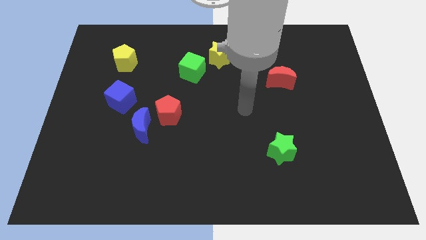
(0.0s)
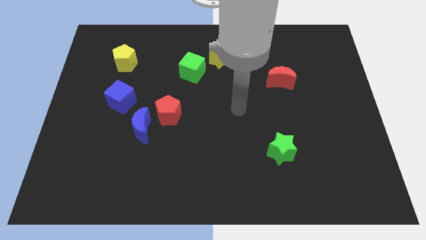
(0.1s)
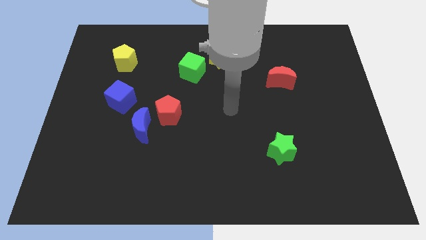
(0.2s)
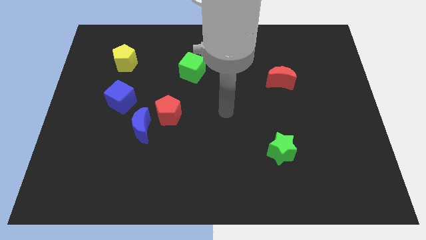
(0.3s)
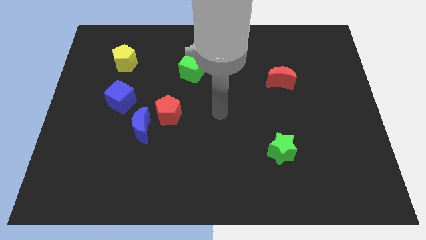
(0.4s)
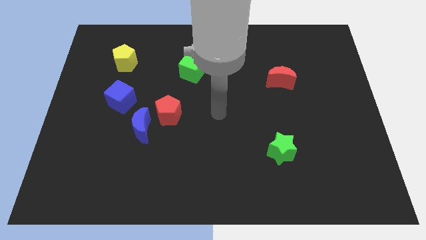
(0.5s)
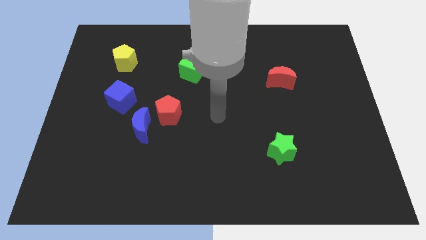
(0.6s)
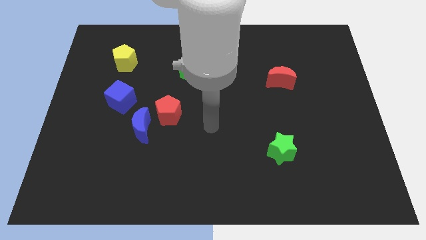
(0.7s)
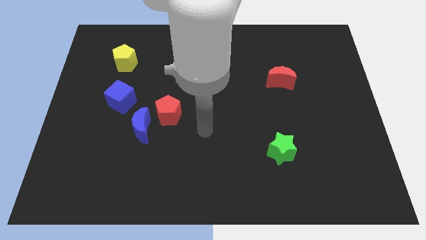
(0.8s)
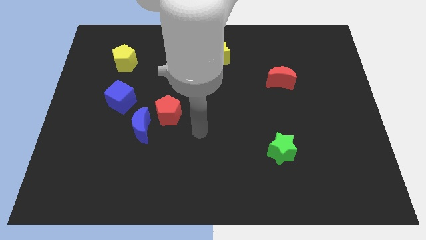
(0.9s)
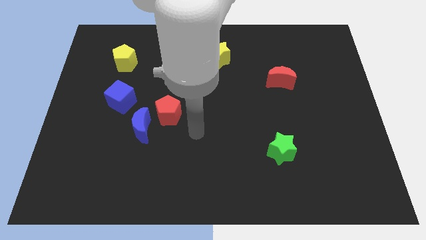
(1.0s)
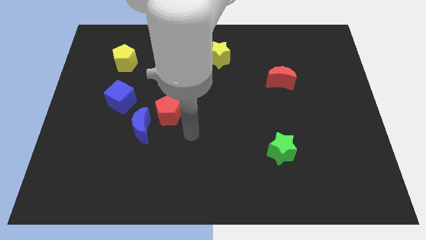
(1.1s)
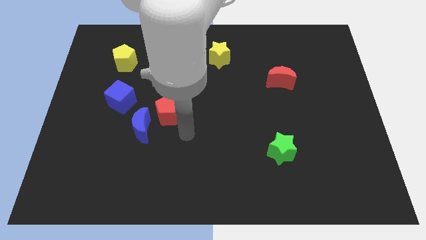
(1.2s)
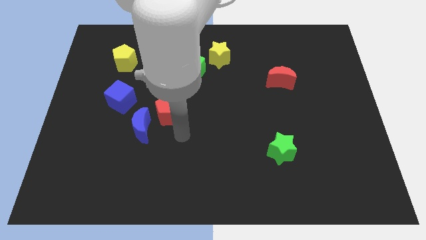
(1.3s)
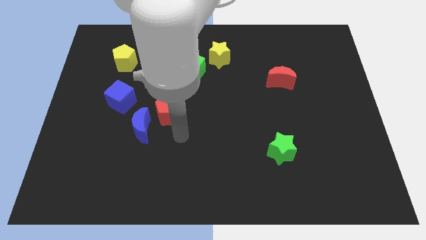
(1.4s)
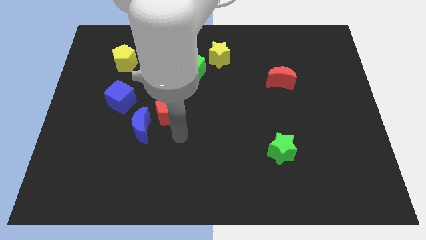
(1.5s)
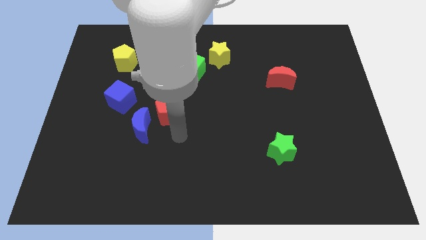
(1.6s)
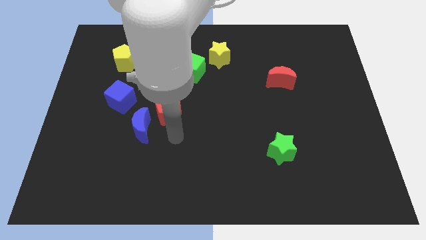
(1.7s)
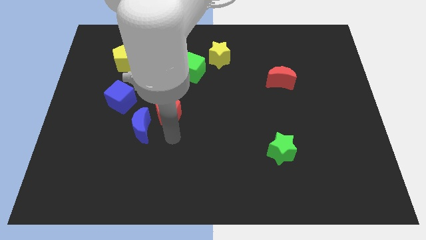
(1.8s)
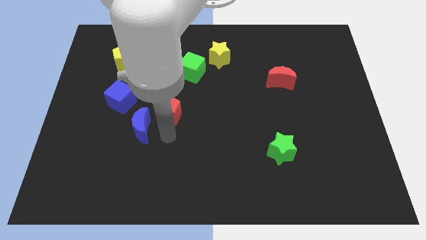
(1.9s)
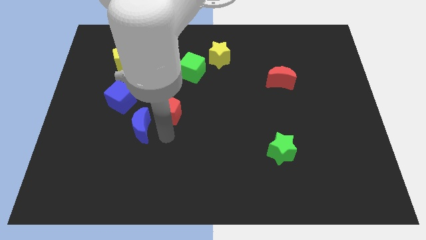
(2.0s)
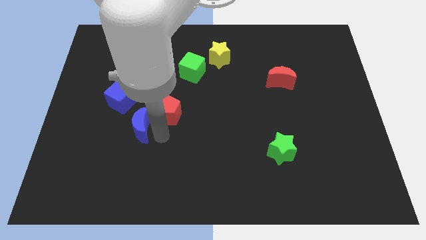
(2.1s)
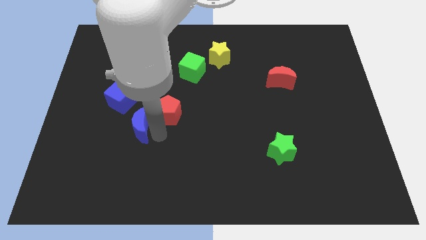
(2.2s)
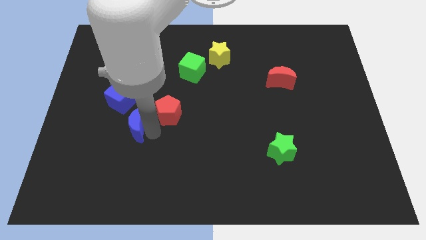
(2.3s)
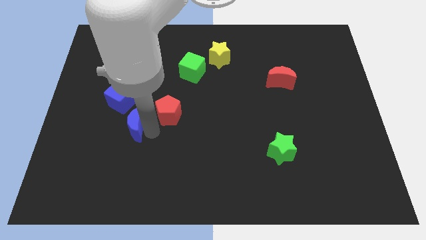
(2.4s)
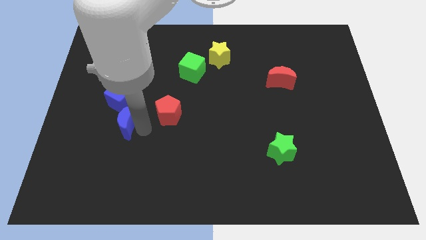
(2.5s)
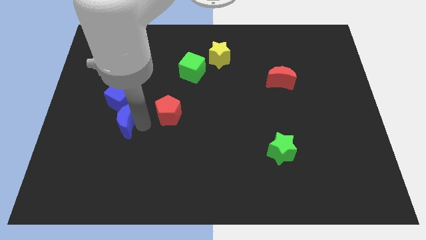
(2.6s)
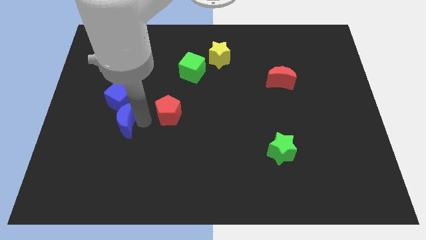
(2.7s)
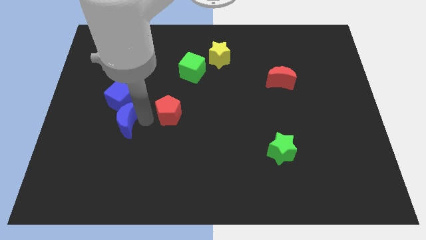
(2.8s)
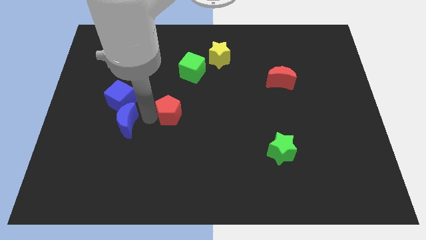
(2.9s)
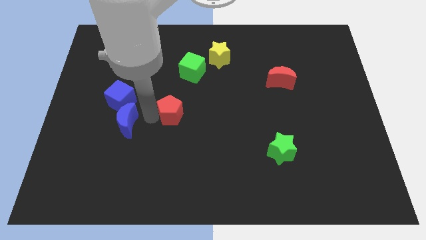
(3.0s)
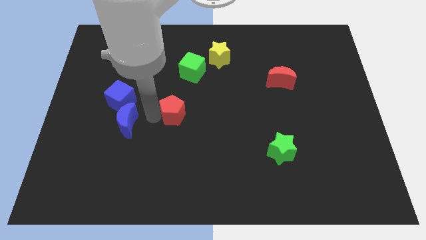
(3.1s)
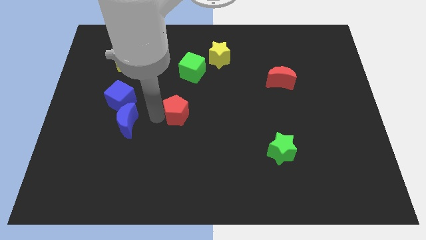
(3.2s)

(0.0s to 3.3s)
place the blue crescent bottom of the blue cube

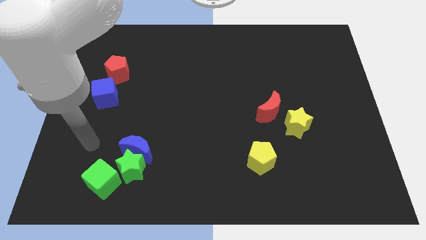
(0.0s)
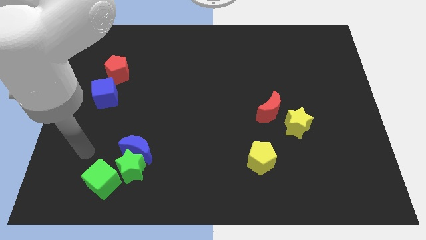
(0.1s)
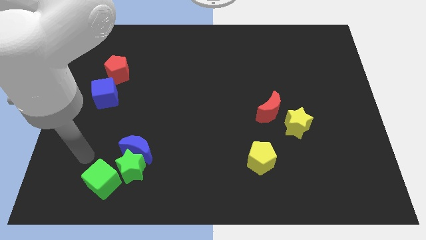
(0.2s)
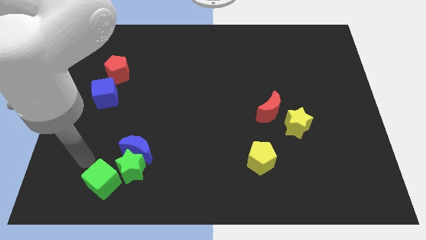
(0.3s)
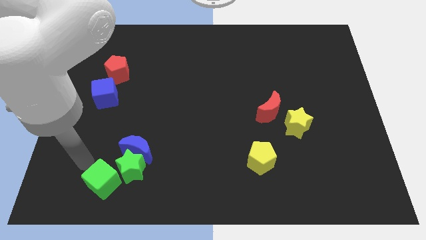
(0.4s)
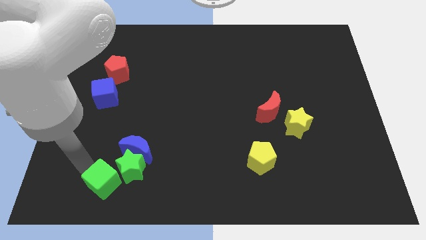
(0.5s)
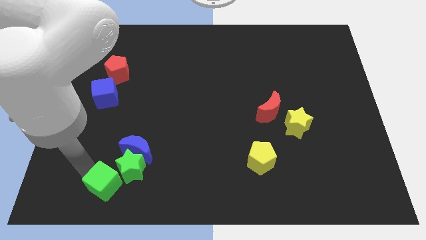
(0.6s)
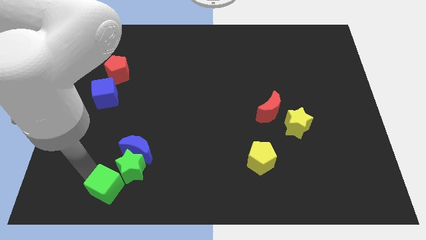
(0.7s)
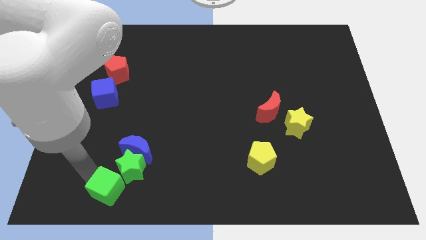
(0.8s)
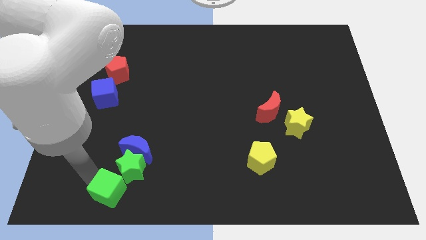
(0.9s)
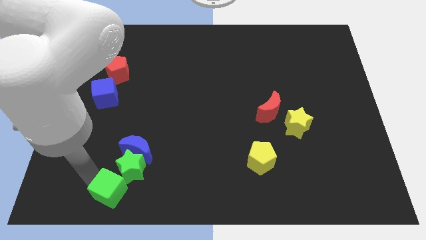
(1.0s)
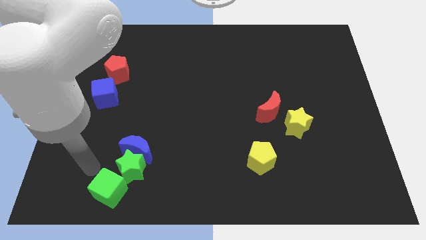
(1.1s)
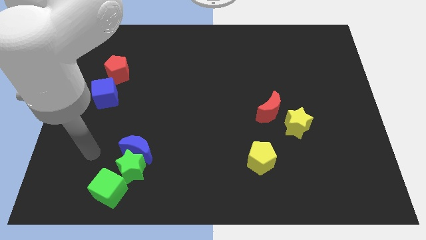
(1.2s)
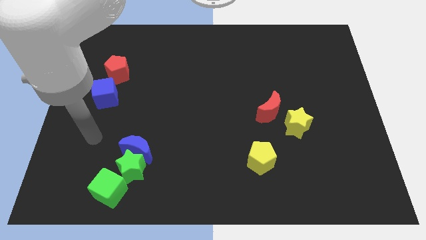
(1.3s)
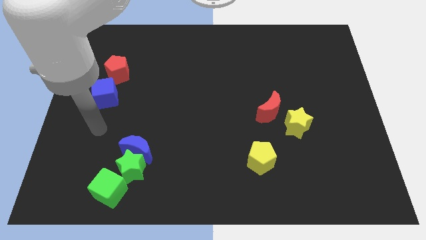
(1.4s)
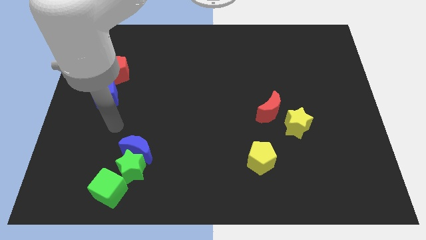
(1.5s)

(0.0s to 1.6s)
place the green cube at the bottom left side of green star

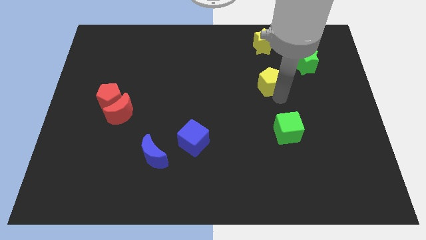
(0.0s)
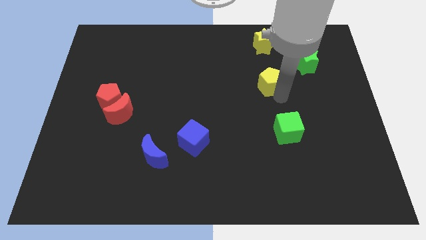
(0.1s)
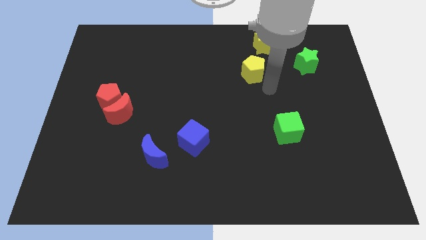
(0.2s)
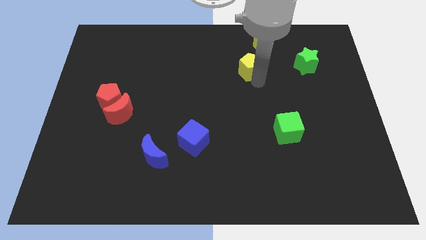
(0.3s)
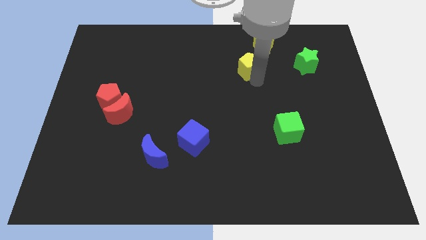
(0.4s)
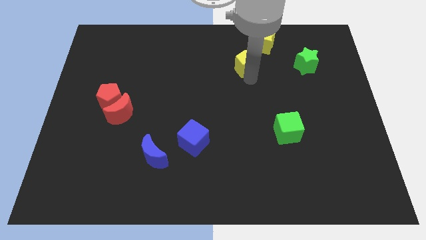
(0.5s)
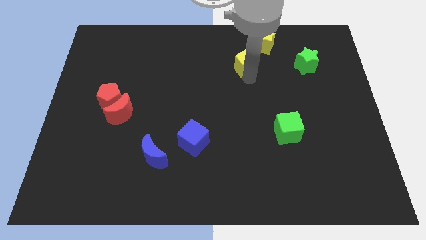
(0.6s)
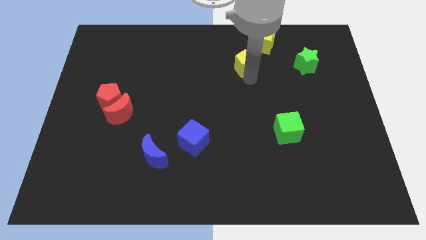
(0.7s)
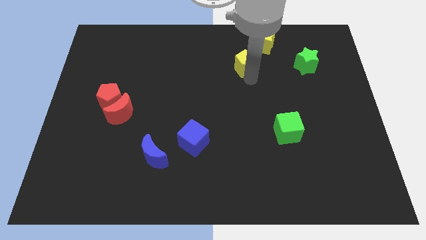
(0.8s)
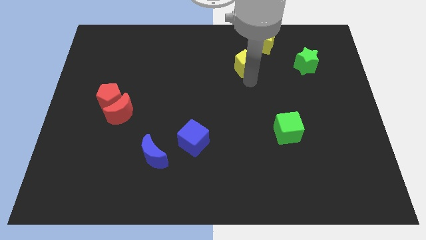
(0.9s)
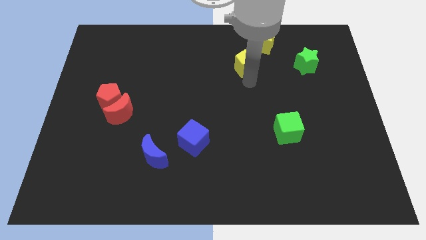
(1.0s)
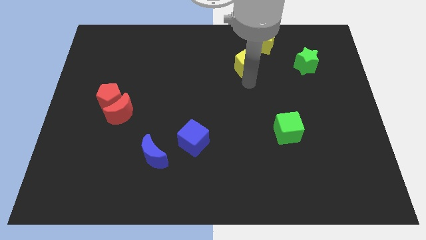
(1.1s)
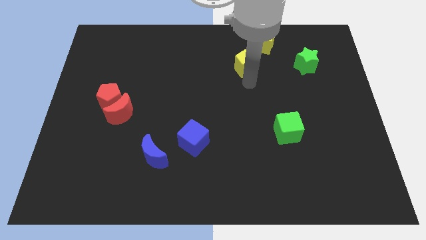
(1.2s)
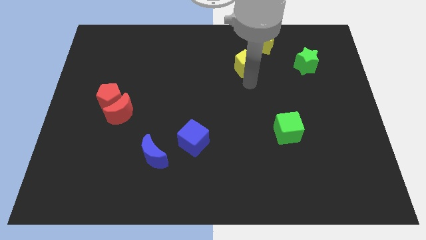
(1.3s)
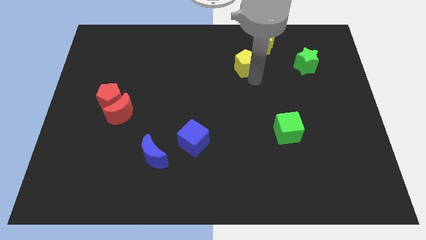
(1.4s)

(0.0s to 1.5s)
place the yellow pentagon below the yellow star

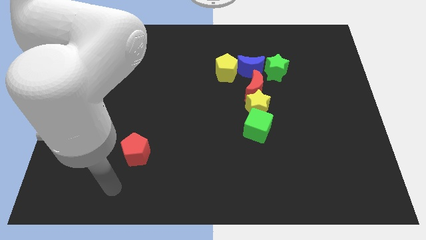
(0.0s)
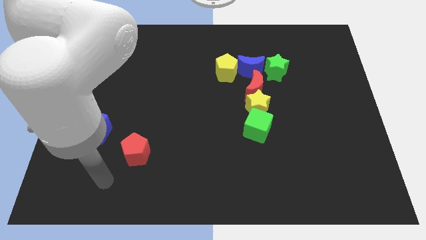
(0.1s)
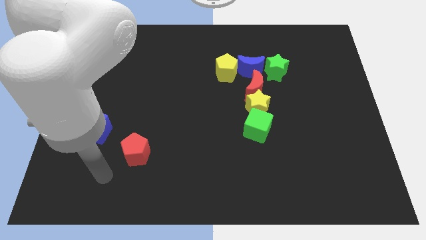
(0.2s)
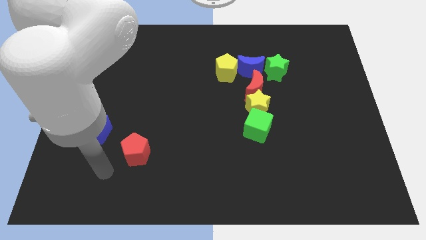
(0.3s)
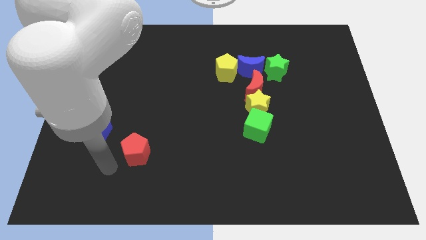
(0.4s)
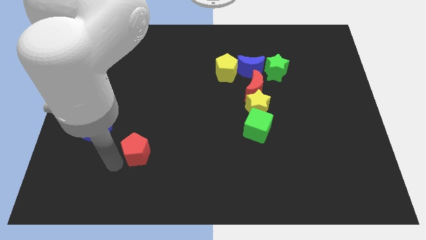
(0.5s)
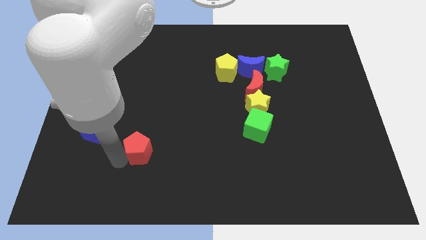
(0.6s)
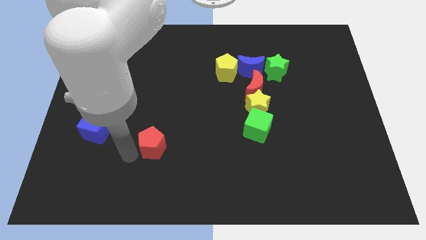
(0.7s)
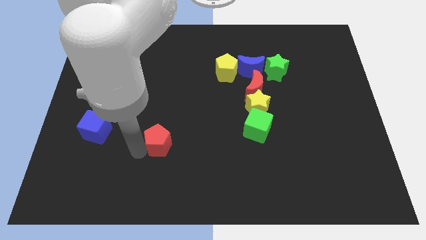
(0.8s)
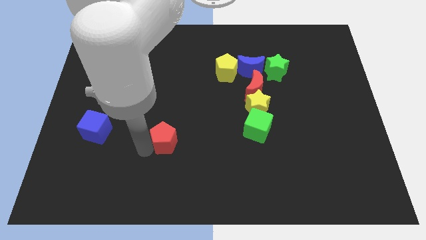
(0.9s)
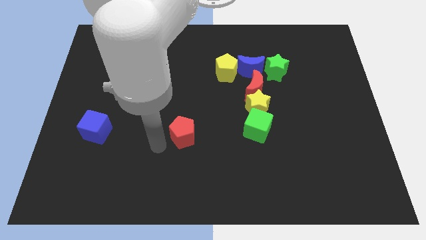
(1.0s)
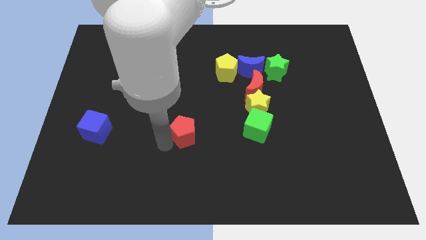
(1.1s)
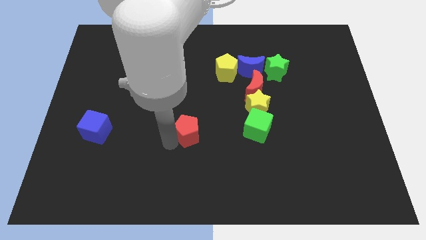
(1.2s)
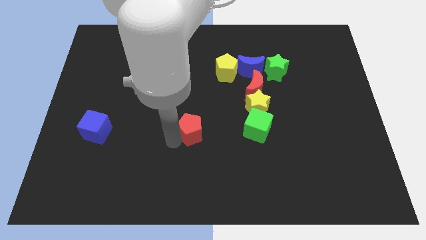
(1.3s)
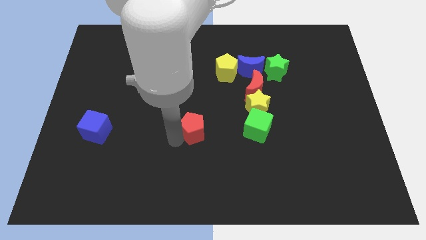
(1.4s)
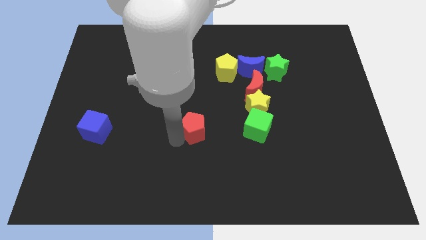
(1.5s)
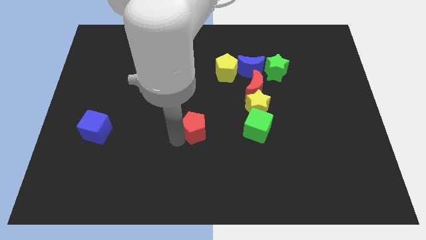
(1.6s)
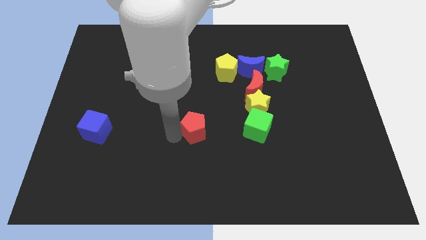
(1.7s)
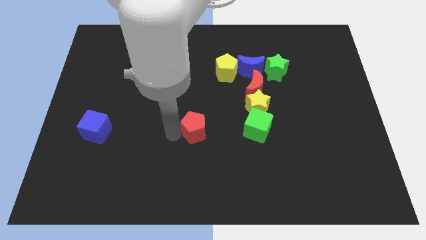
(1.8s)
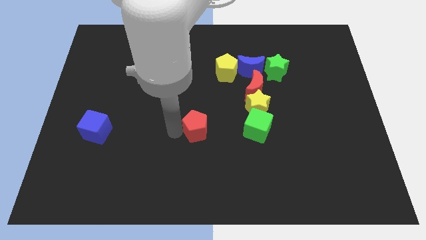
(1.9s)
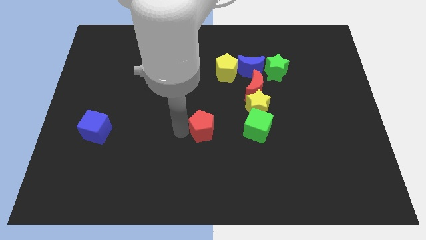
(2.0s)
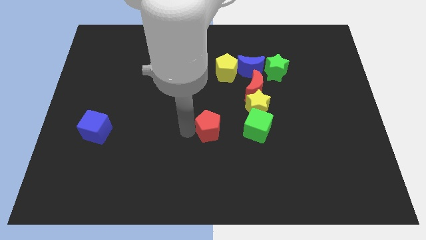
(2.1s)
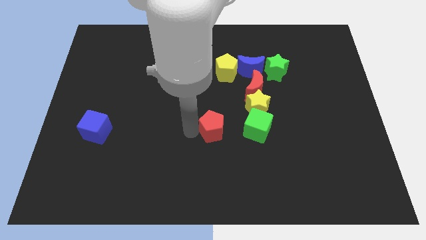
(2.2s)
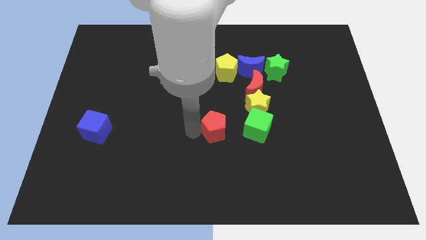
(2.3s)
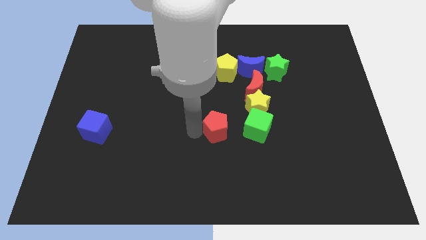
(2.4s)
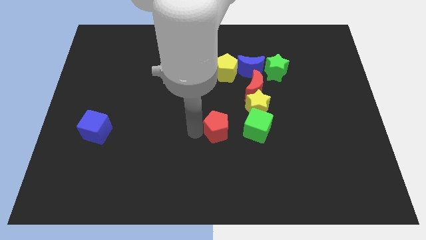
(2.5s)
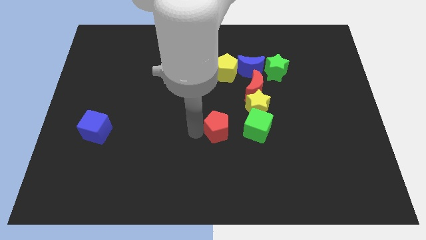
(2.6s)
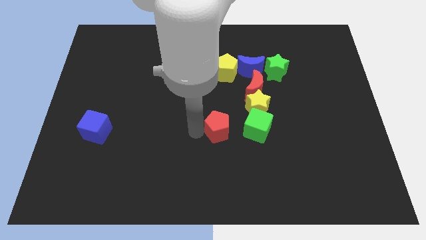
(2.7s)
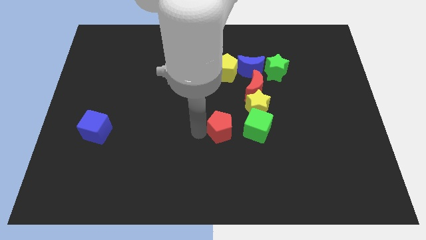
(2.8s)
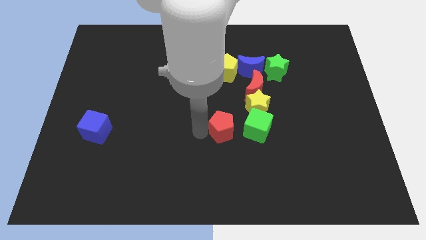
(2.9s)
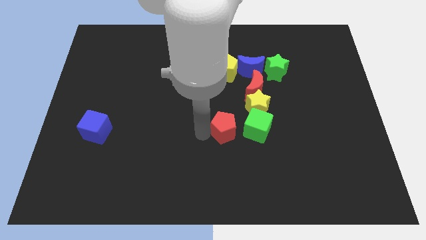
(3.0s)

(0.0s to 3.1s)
push the red pentagon to the left of the green cube
